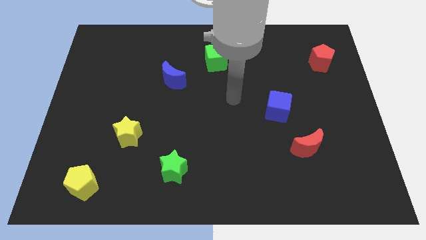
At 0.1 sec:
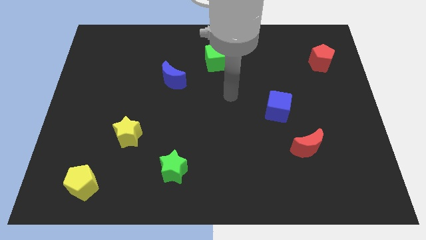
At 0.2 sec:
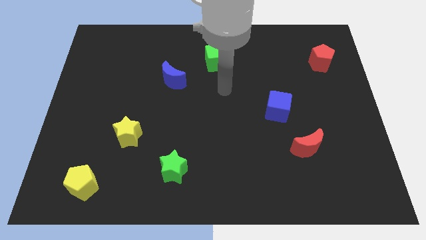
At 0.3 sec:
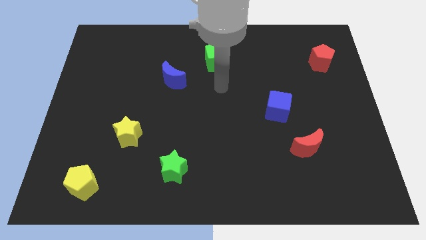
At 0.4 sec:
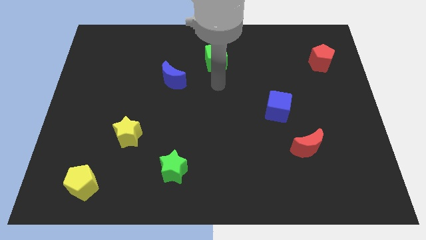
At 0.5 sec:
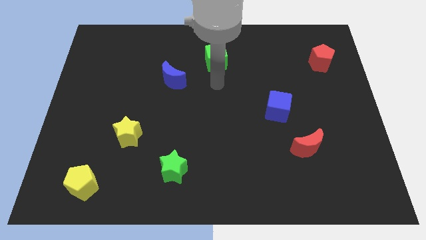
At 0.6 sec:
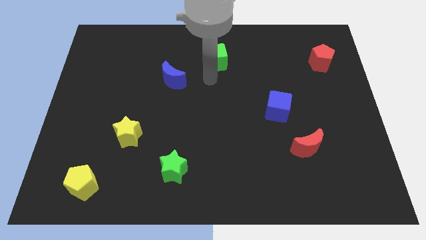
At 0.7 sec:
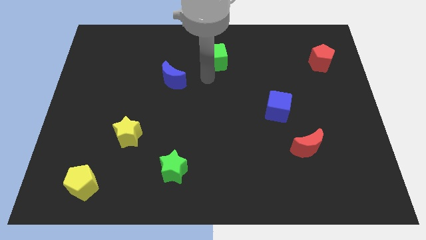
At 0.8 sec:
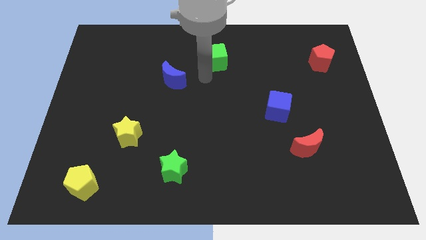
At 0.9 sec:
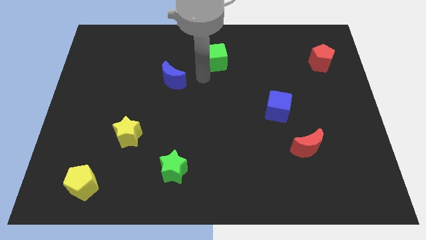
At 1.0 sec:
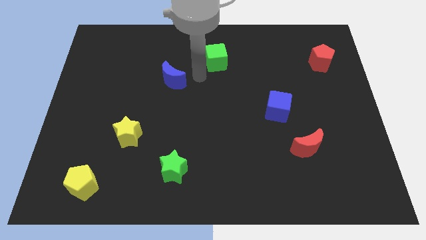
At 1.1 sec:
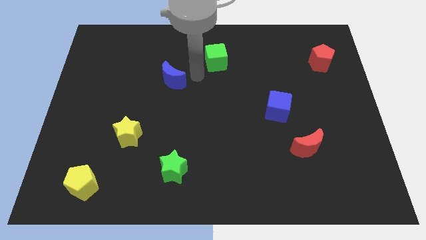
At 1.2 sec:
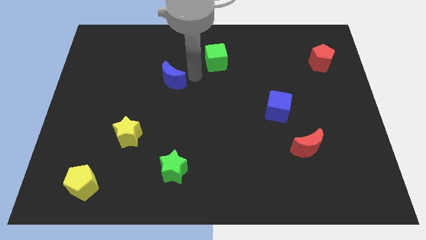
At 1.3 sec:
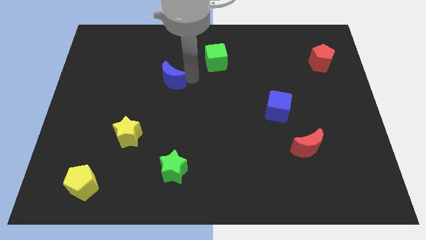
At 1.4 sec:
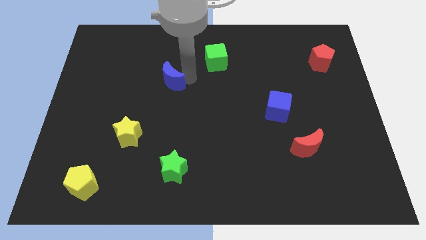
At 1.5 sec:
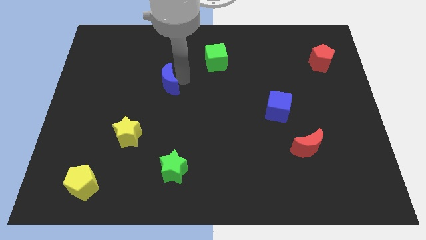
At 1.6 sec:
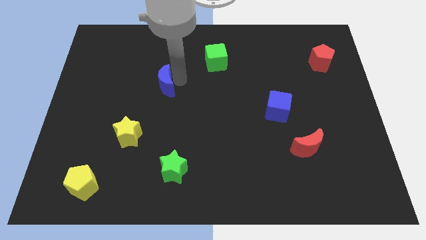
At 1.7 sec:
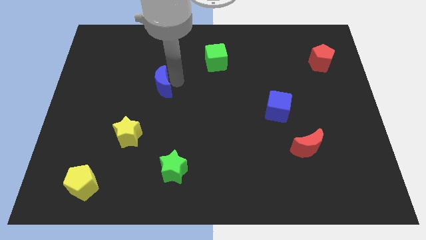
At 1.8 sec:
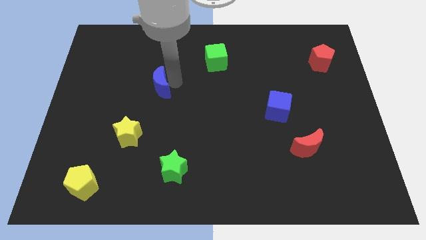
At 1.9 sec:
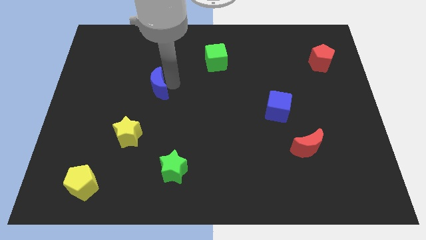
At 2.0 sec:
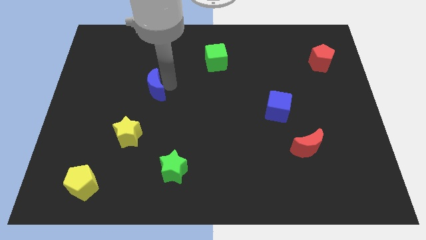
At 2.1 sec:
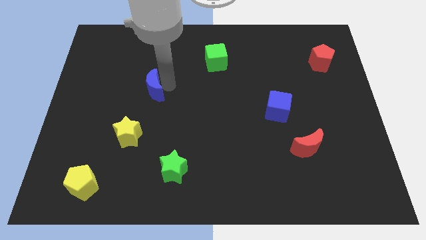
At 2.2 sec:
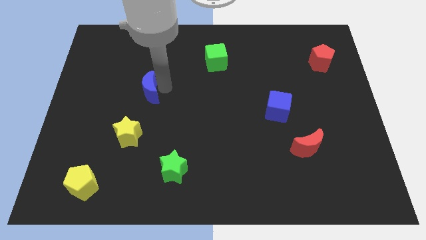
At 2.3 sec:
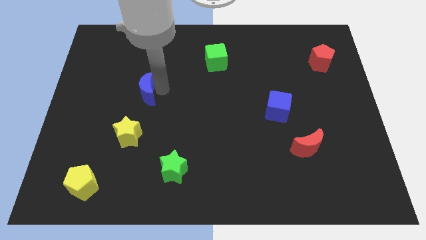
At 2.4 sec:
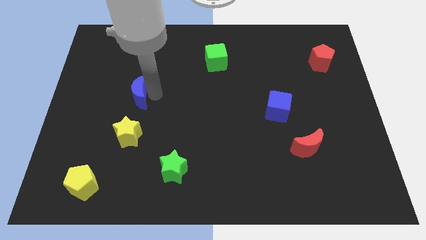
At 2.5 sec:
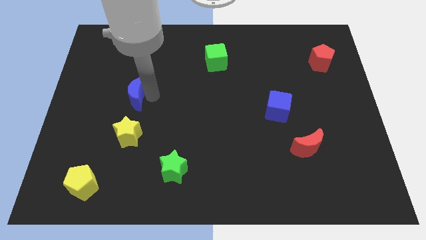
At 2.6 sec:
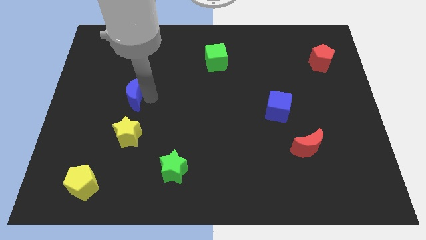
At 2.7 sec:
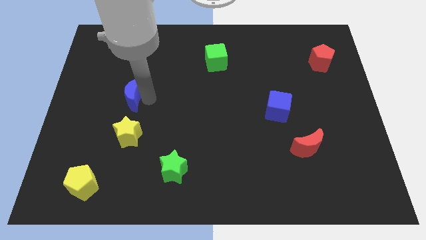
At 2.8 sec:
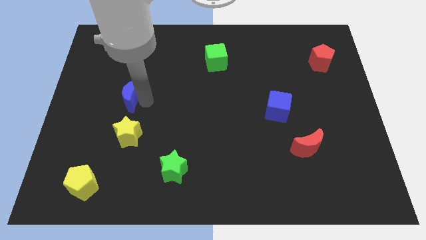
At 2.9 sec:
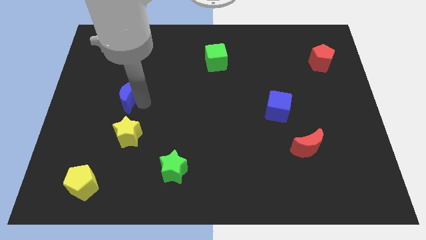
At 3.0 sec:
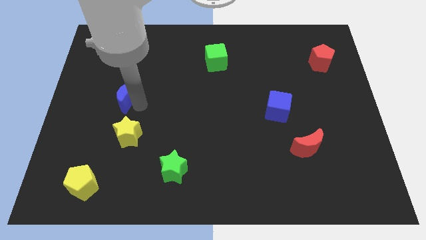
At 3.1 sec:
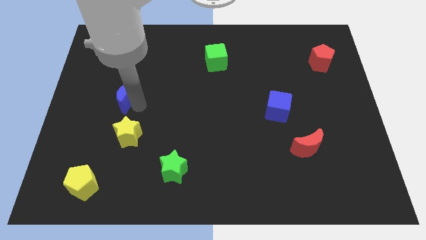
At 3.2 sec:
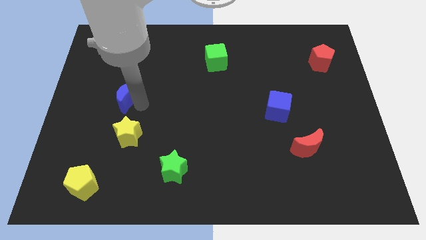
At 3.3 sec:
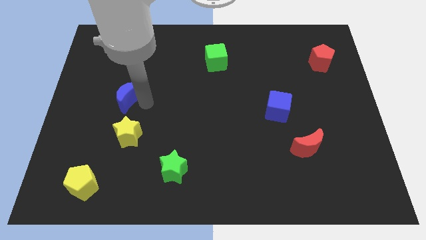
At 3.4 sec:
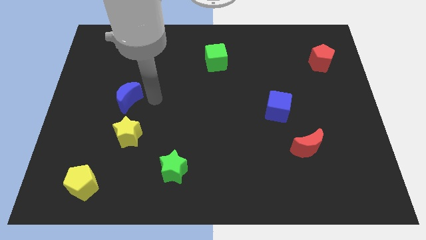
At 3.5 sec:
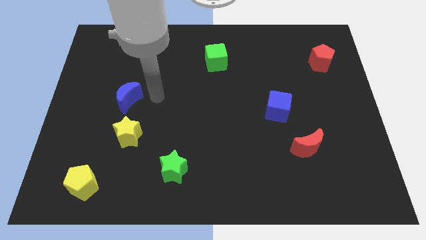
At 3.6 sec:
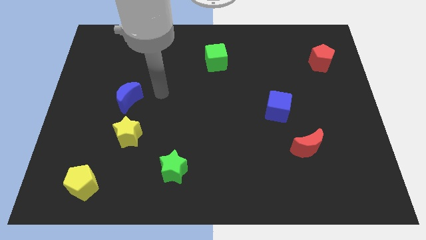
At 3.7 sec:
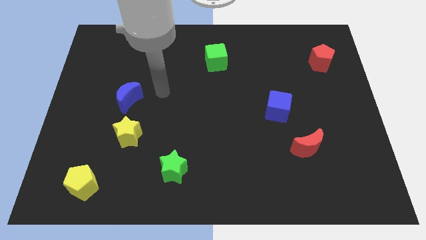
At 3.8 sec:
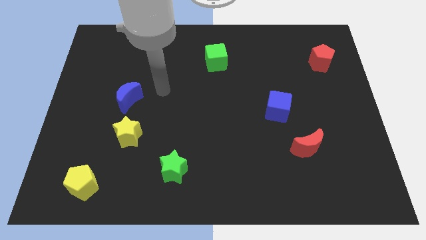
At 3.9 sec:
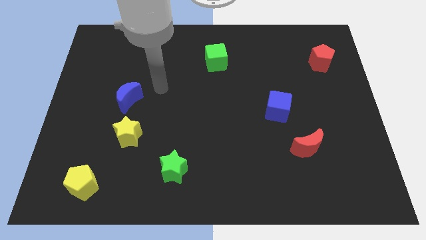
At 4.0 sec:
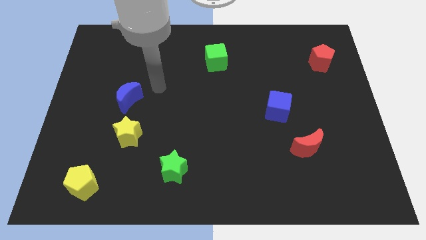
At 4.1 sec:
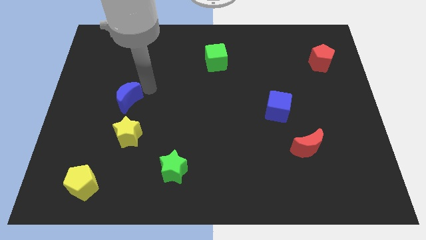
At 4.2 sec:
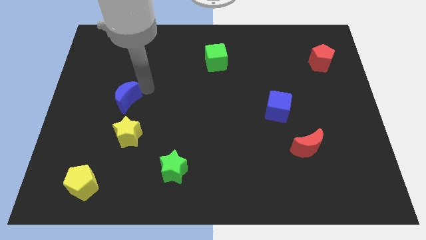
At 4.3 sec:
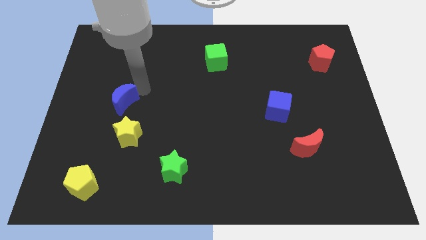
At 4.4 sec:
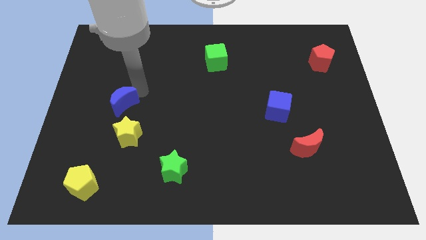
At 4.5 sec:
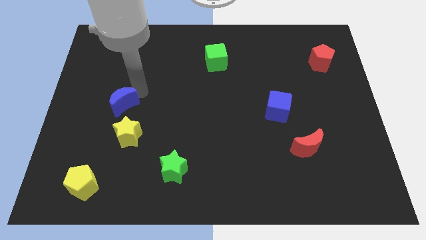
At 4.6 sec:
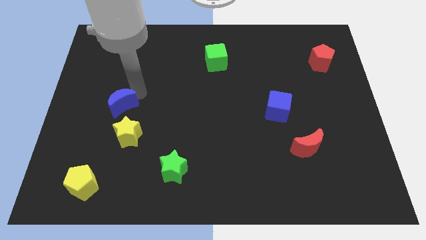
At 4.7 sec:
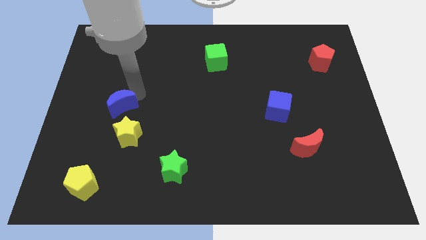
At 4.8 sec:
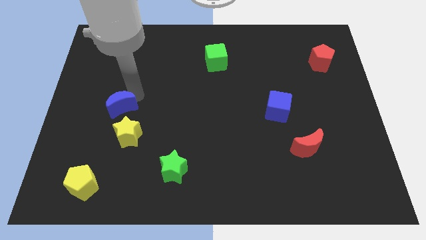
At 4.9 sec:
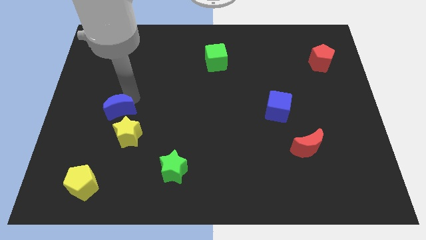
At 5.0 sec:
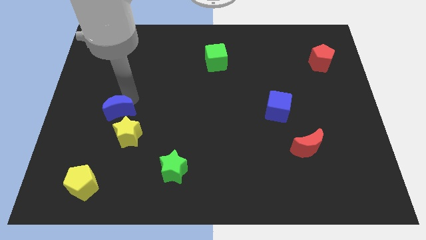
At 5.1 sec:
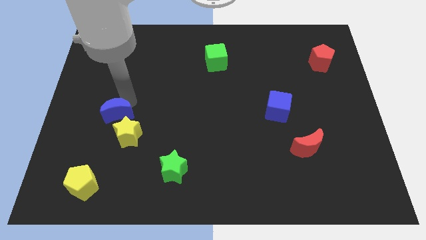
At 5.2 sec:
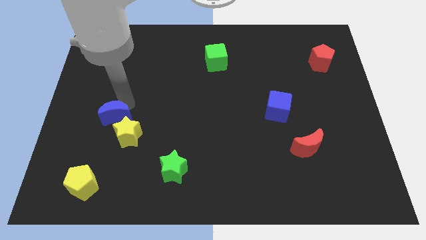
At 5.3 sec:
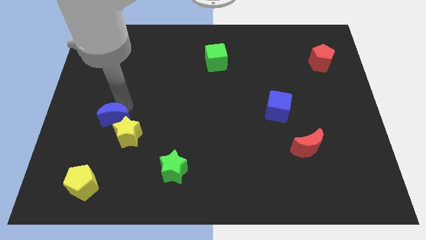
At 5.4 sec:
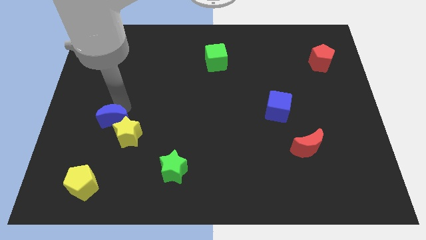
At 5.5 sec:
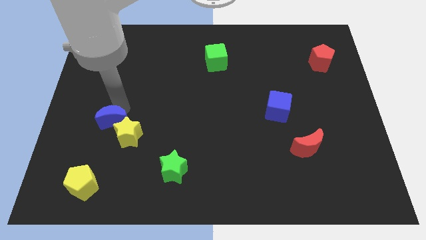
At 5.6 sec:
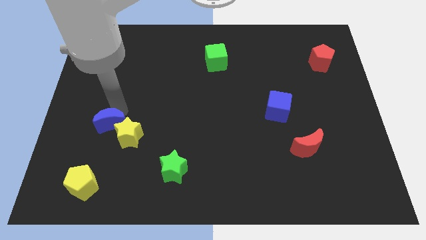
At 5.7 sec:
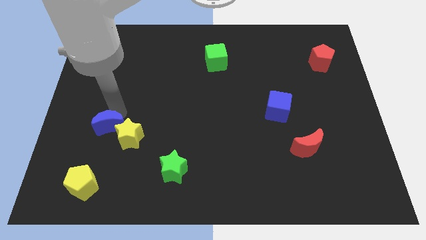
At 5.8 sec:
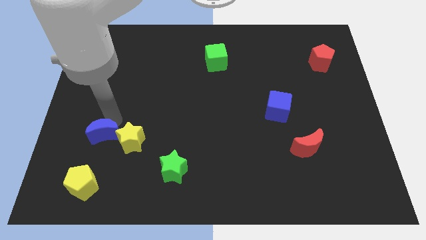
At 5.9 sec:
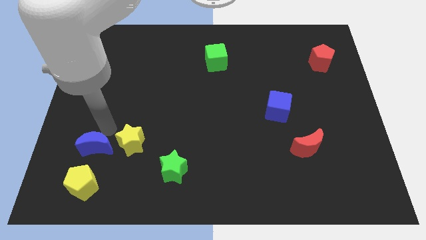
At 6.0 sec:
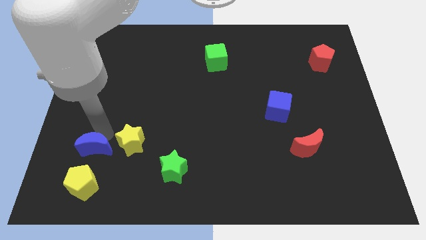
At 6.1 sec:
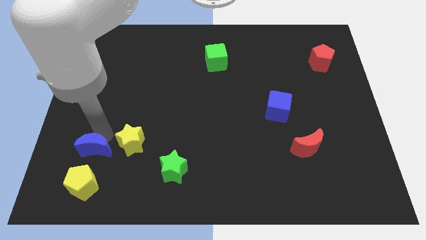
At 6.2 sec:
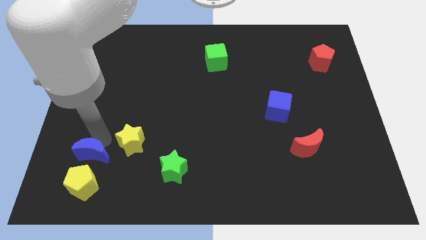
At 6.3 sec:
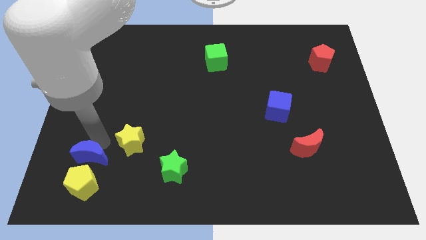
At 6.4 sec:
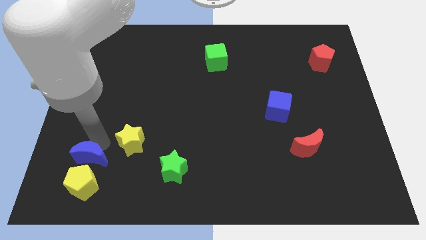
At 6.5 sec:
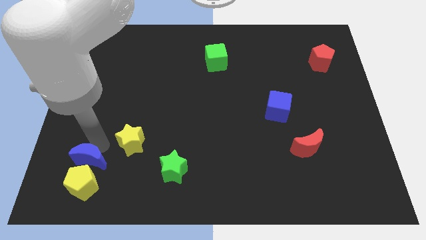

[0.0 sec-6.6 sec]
push the blue moon next to the yellow pentagon

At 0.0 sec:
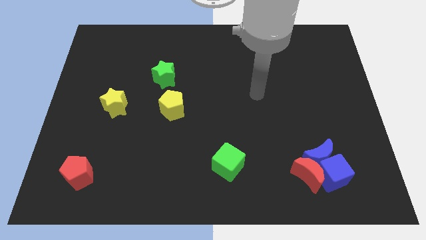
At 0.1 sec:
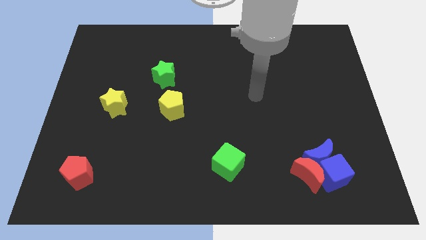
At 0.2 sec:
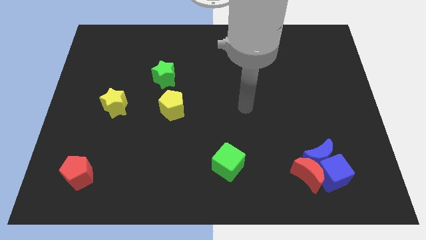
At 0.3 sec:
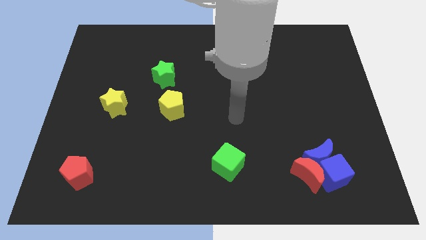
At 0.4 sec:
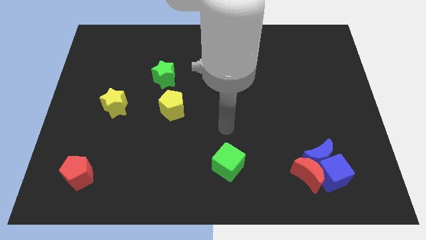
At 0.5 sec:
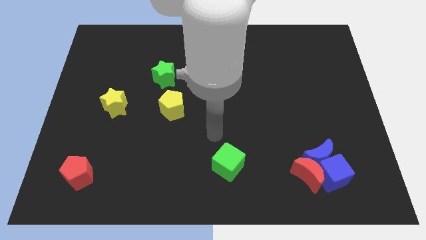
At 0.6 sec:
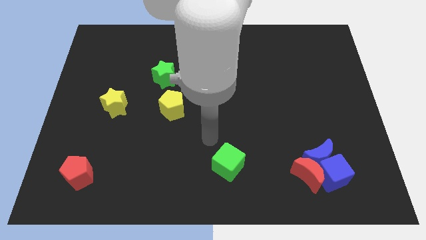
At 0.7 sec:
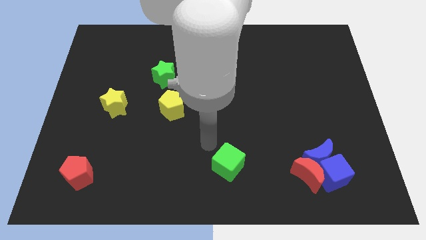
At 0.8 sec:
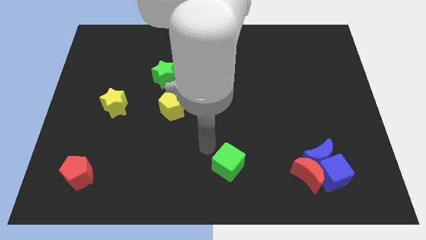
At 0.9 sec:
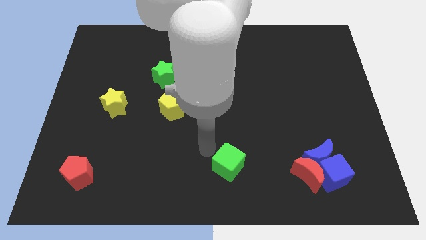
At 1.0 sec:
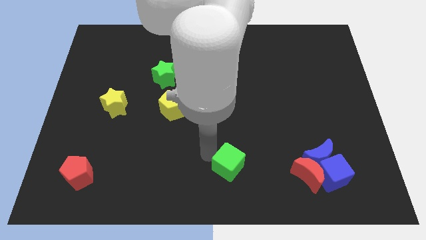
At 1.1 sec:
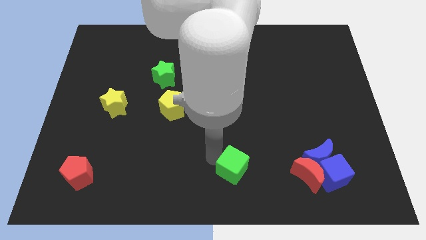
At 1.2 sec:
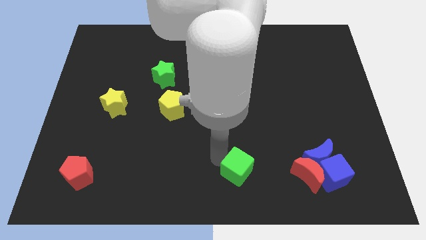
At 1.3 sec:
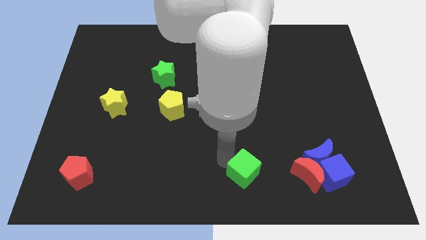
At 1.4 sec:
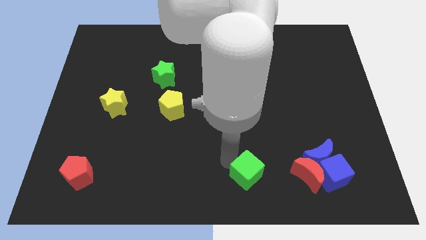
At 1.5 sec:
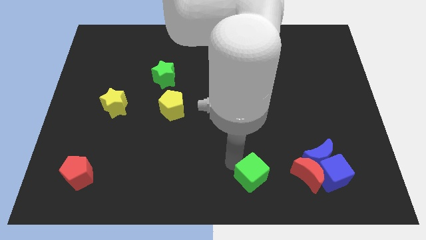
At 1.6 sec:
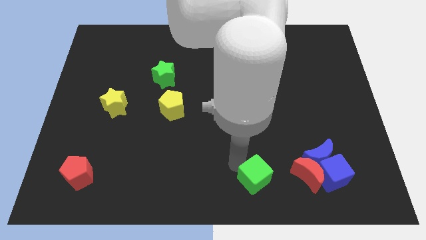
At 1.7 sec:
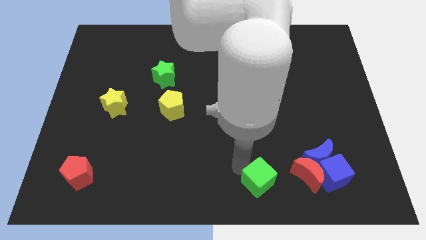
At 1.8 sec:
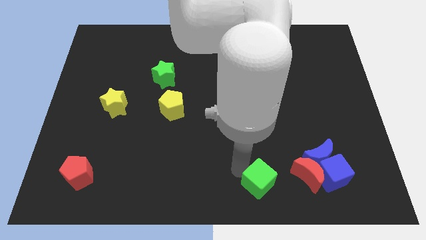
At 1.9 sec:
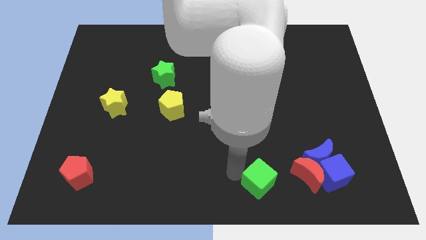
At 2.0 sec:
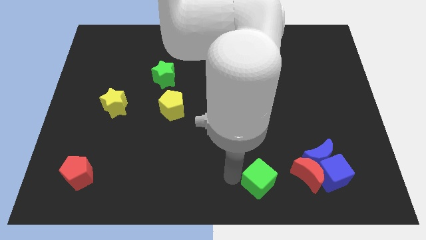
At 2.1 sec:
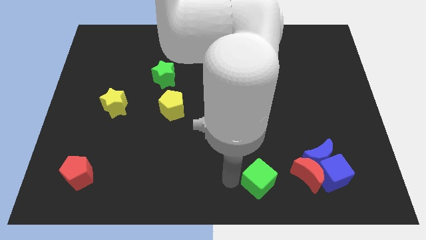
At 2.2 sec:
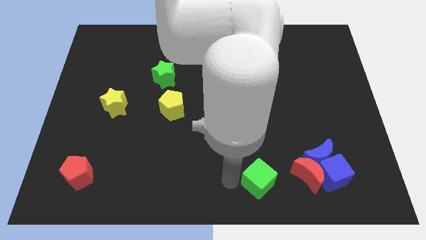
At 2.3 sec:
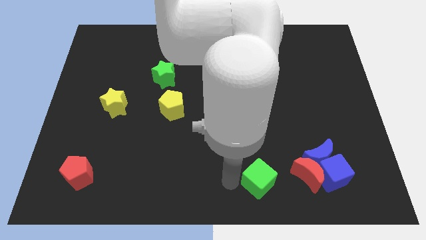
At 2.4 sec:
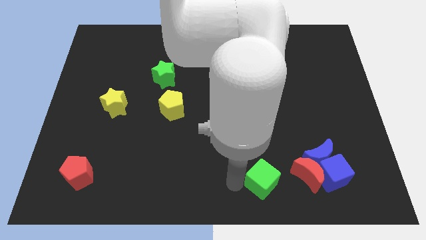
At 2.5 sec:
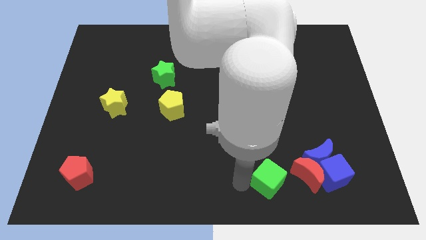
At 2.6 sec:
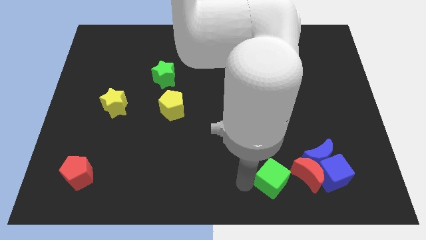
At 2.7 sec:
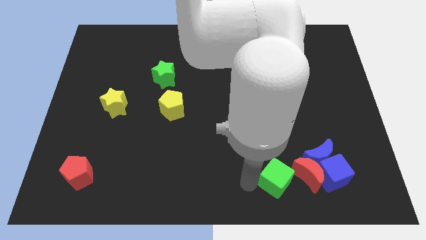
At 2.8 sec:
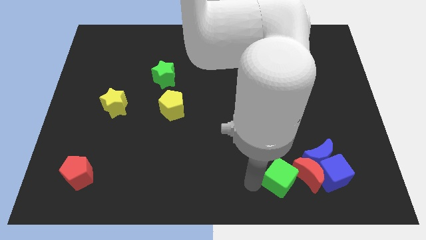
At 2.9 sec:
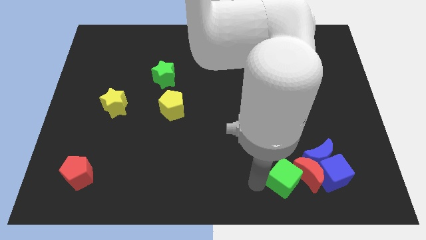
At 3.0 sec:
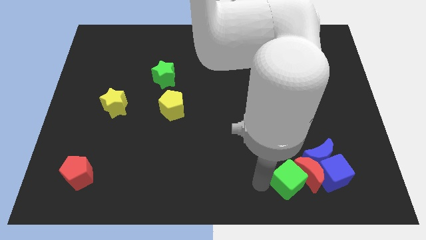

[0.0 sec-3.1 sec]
put the green cube to the red moon
